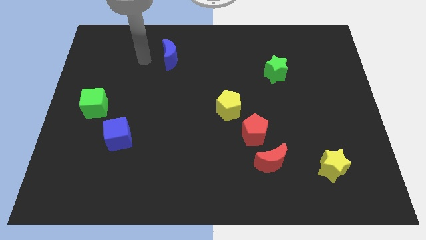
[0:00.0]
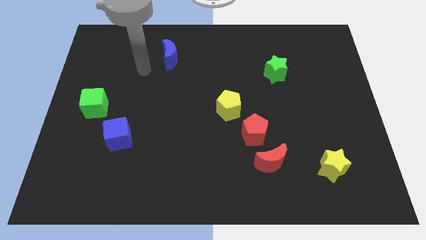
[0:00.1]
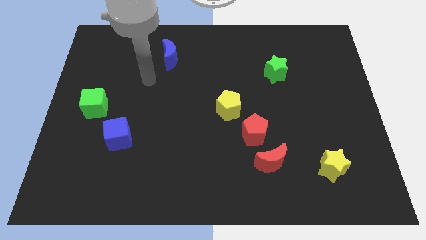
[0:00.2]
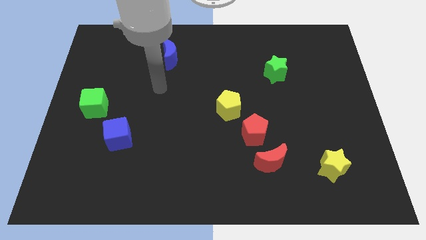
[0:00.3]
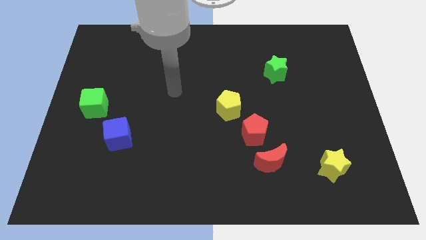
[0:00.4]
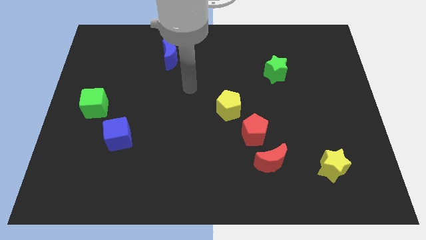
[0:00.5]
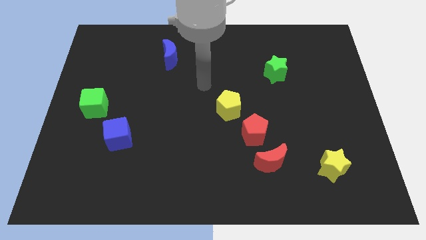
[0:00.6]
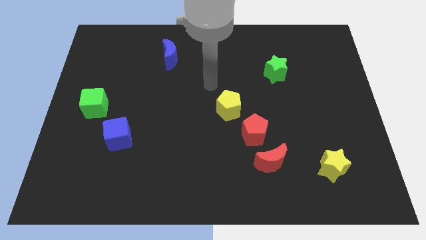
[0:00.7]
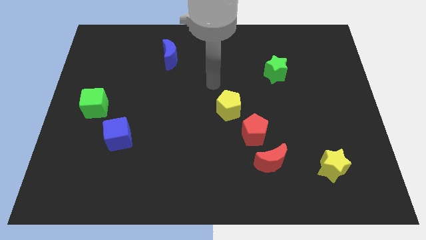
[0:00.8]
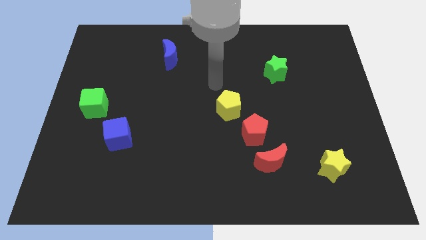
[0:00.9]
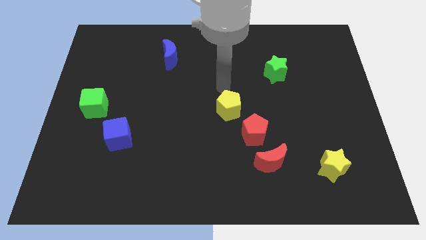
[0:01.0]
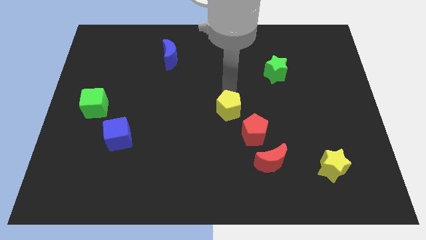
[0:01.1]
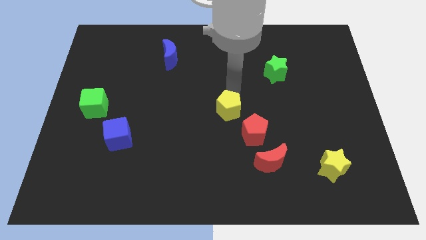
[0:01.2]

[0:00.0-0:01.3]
place your arm to the top of the yellow pentagon

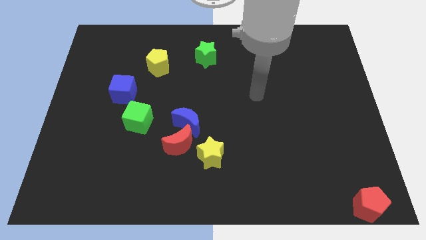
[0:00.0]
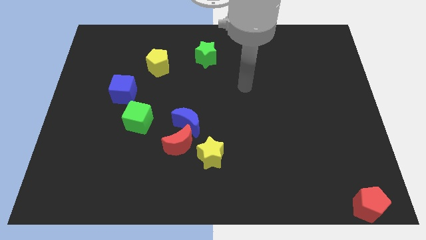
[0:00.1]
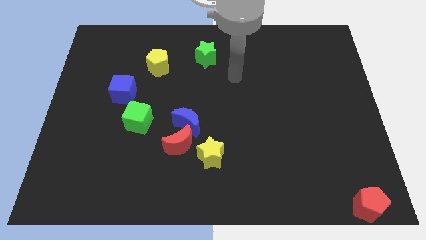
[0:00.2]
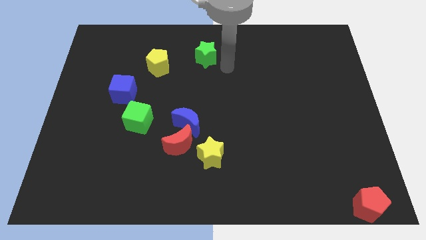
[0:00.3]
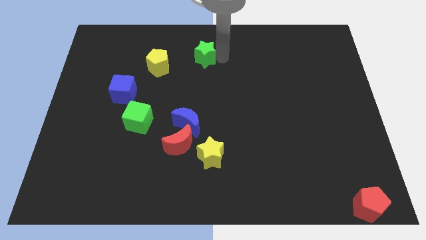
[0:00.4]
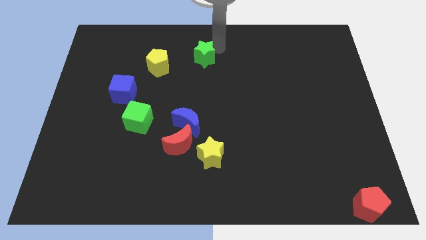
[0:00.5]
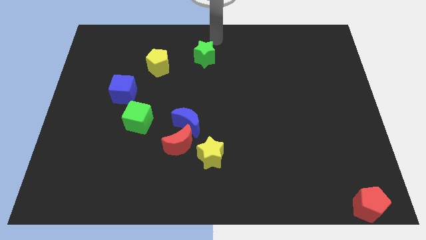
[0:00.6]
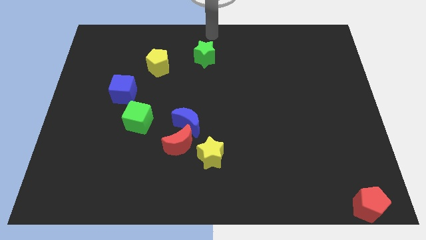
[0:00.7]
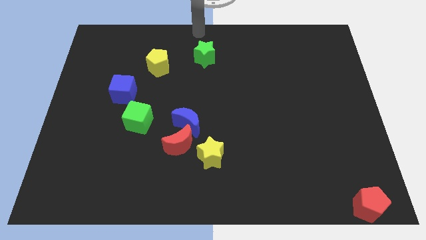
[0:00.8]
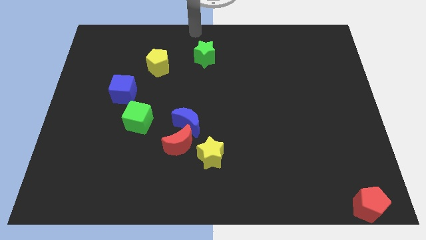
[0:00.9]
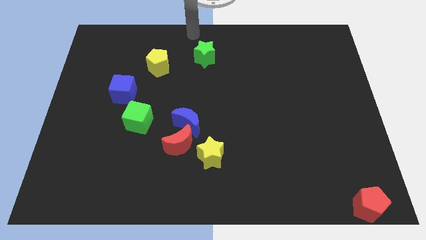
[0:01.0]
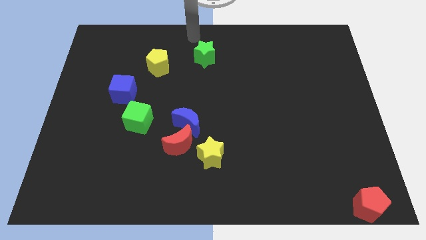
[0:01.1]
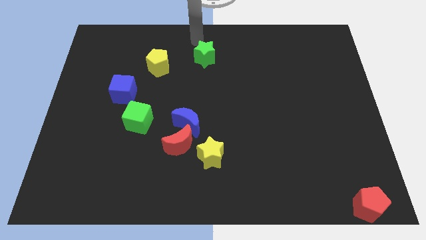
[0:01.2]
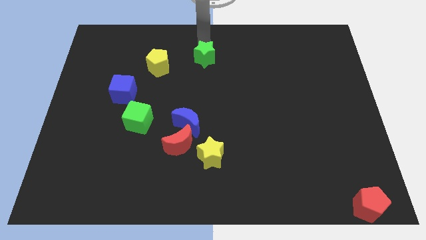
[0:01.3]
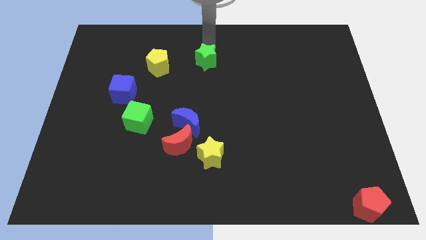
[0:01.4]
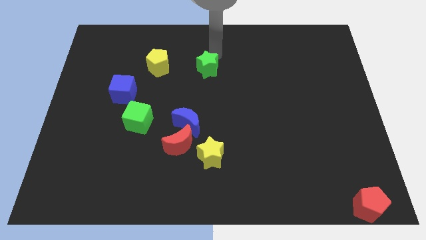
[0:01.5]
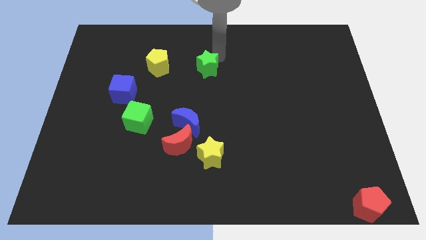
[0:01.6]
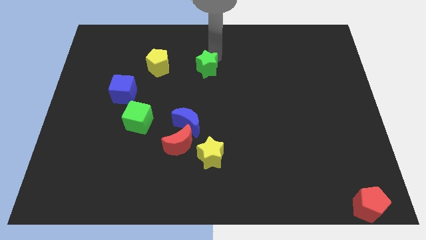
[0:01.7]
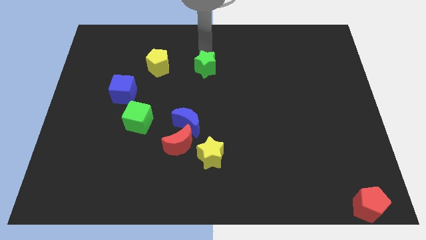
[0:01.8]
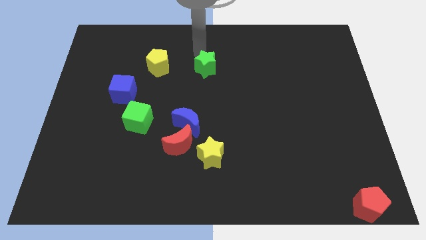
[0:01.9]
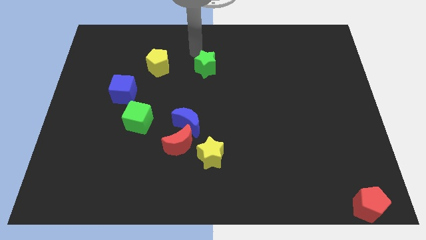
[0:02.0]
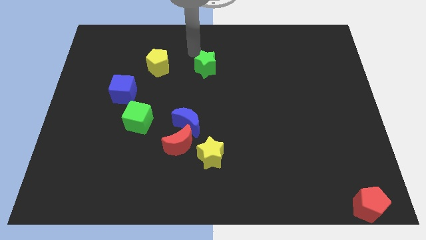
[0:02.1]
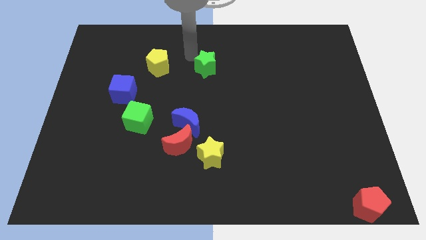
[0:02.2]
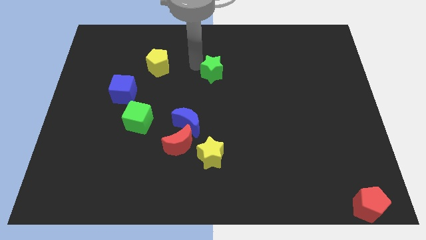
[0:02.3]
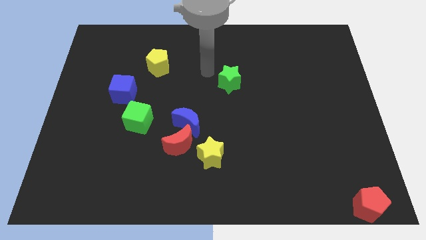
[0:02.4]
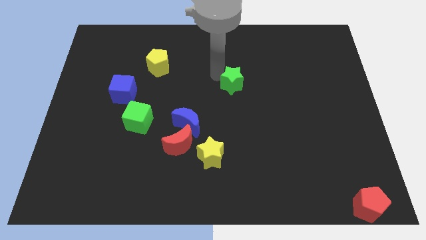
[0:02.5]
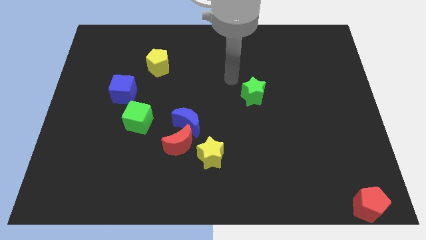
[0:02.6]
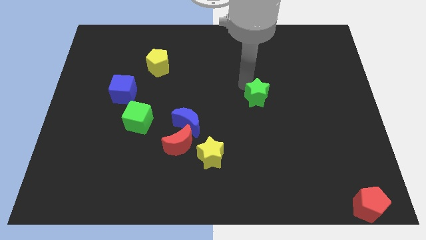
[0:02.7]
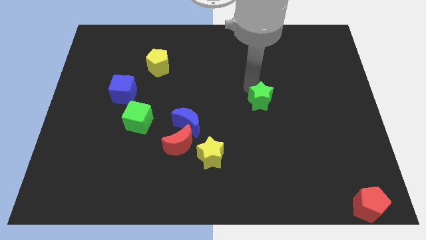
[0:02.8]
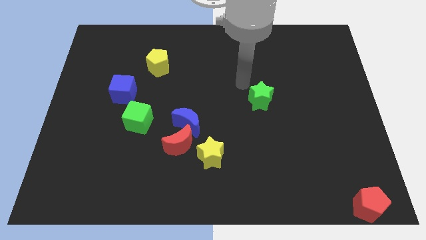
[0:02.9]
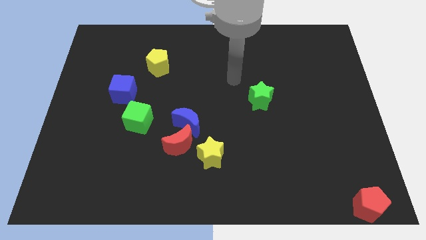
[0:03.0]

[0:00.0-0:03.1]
move green star to the top right of blue moon

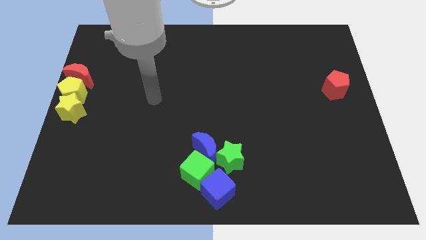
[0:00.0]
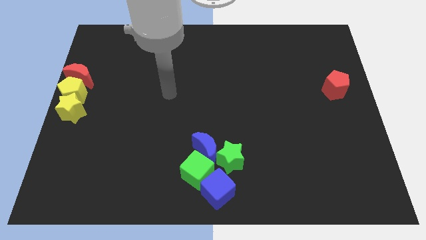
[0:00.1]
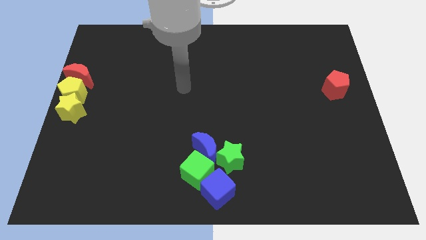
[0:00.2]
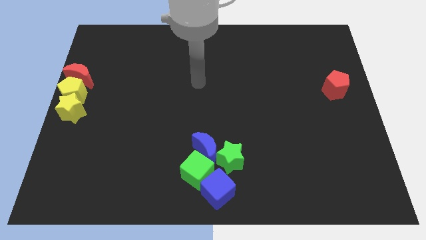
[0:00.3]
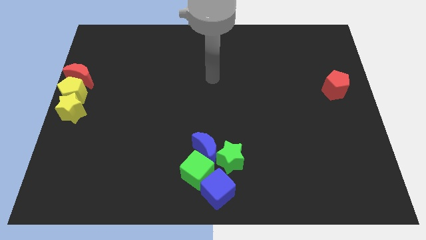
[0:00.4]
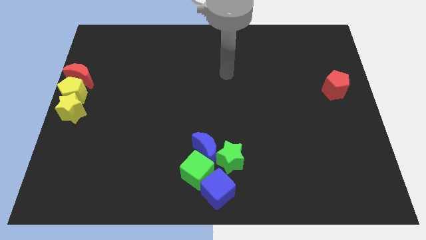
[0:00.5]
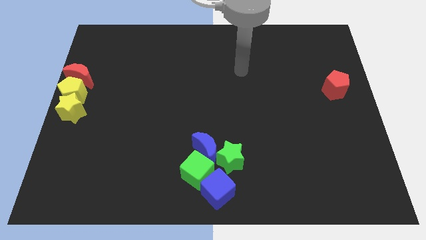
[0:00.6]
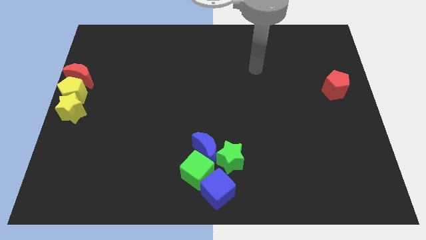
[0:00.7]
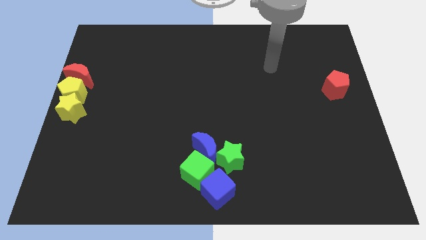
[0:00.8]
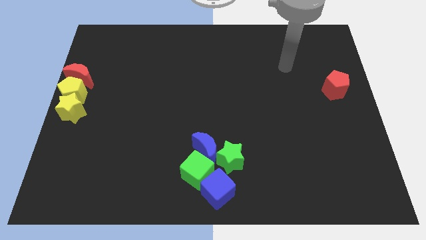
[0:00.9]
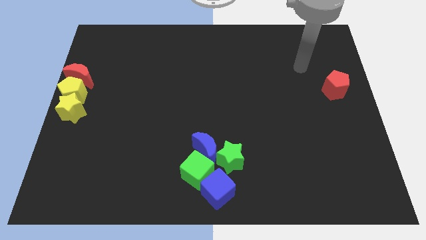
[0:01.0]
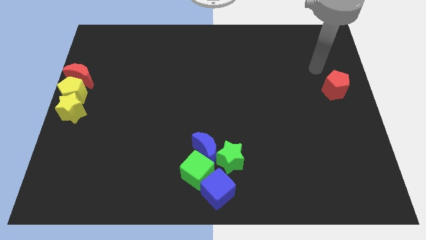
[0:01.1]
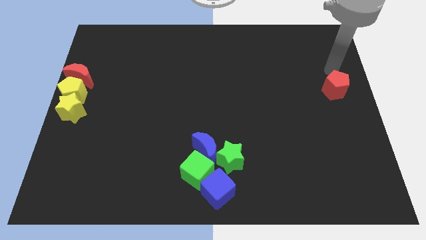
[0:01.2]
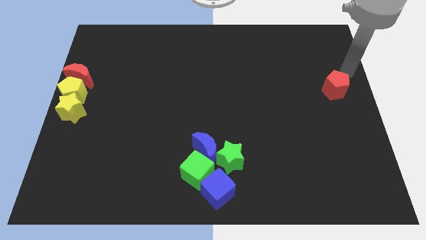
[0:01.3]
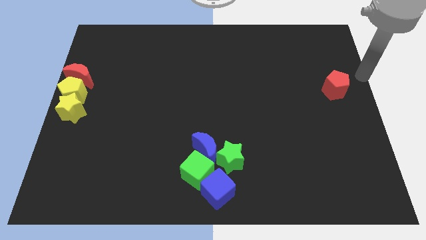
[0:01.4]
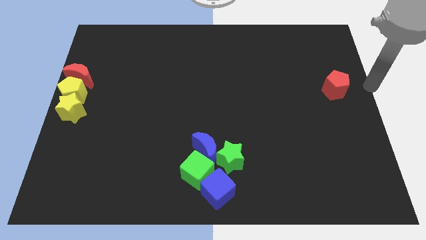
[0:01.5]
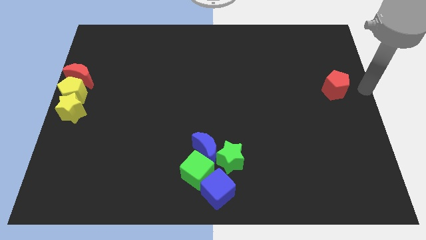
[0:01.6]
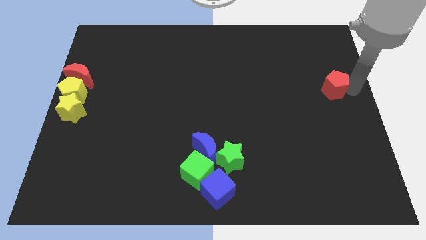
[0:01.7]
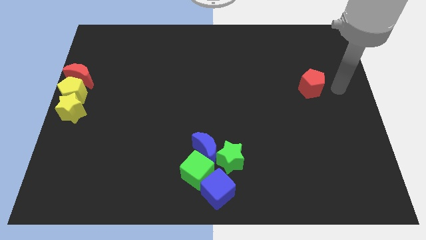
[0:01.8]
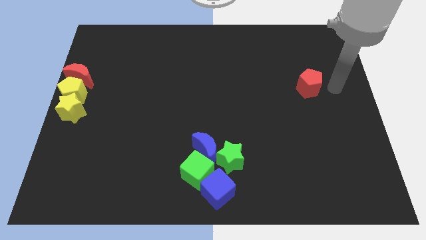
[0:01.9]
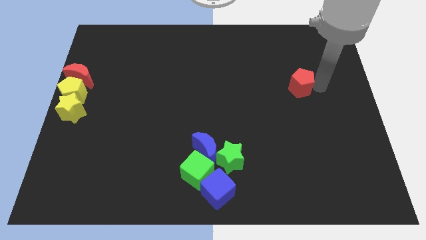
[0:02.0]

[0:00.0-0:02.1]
move the red pentagon slightly towards the left

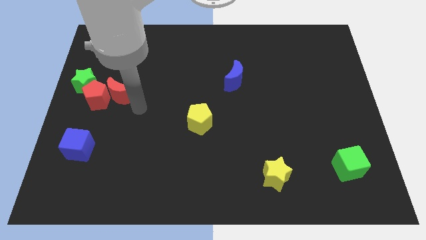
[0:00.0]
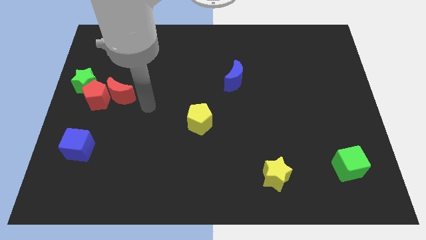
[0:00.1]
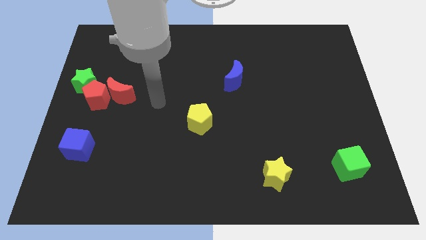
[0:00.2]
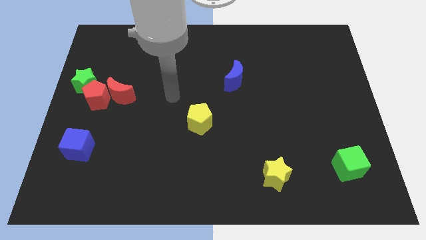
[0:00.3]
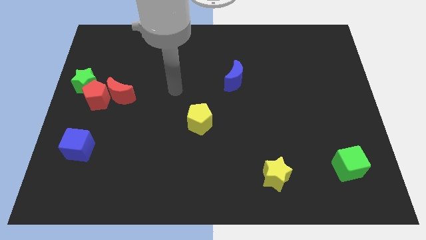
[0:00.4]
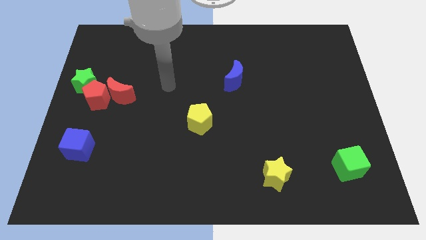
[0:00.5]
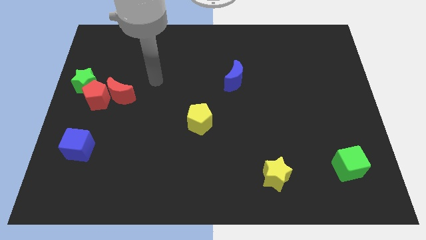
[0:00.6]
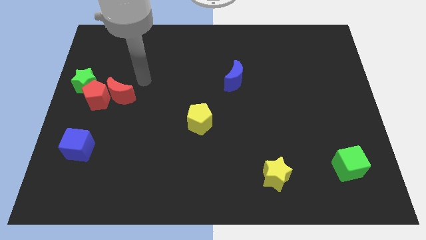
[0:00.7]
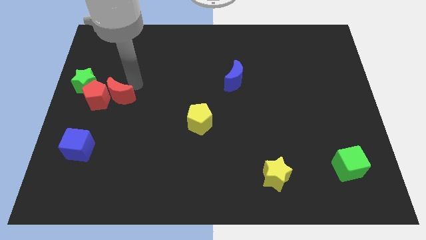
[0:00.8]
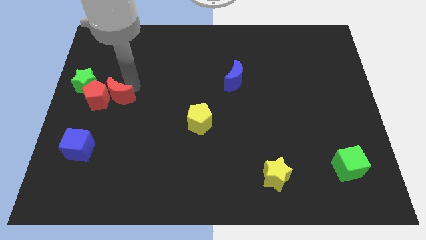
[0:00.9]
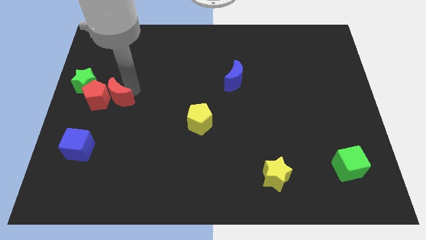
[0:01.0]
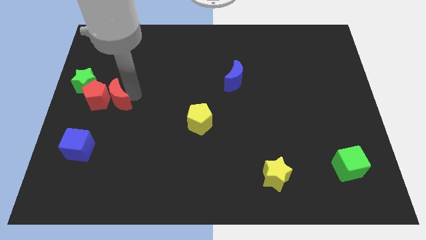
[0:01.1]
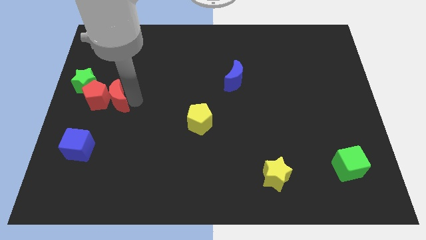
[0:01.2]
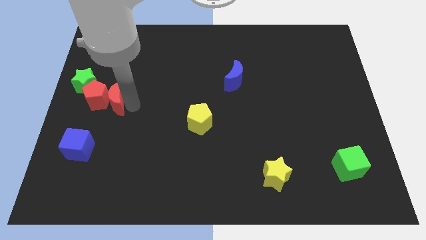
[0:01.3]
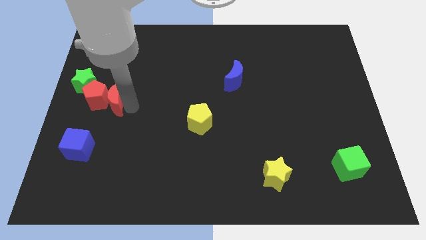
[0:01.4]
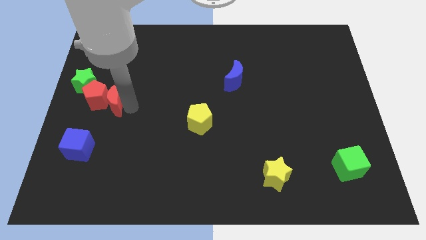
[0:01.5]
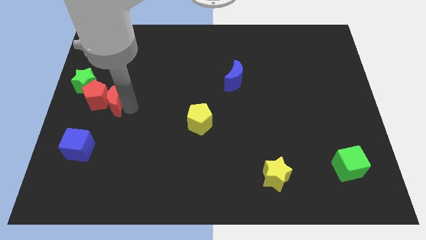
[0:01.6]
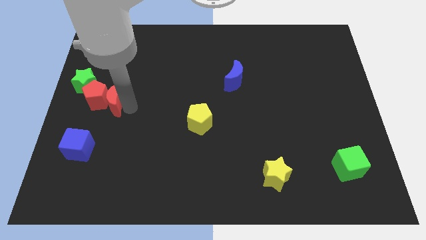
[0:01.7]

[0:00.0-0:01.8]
slightly turn the red moon to the right of the red pentagon

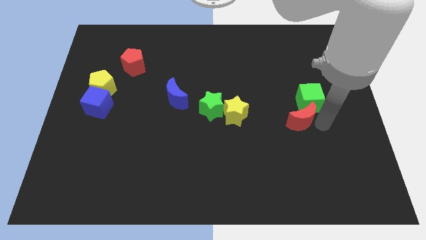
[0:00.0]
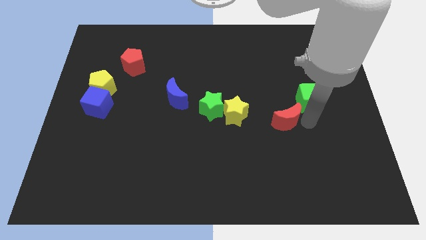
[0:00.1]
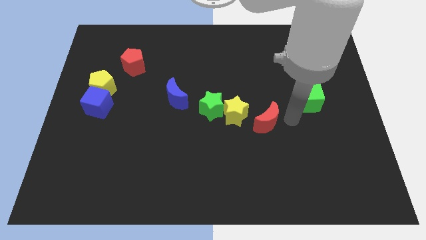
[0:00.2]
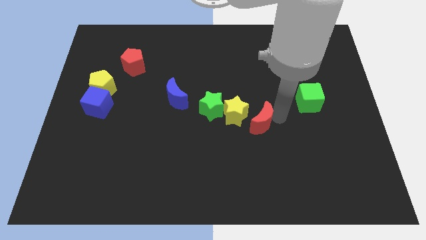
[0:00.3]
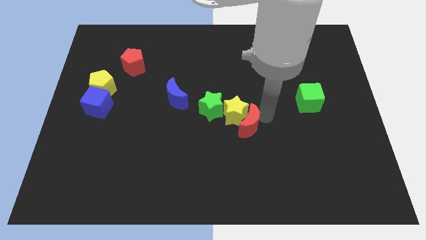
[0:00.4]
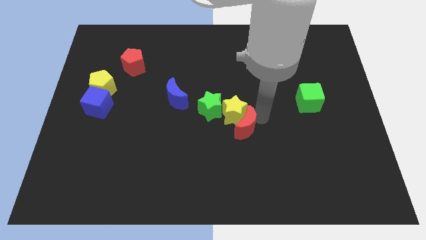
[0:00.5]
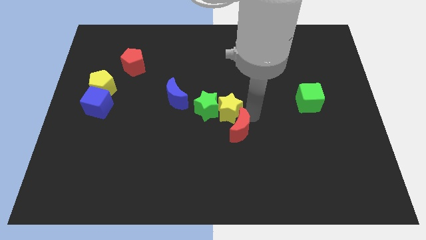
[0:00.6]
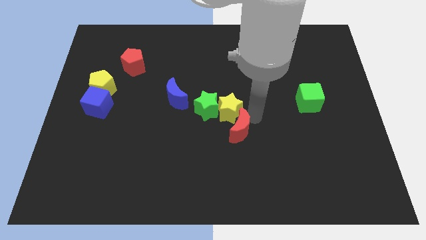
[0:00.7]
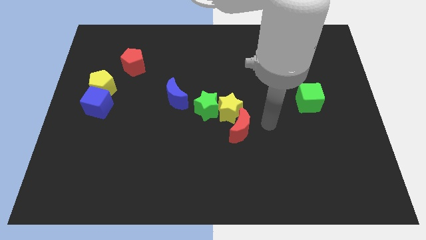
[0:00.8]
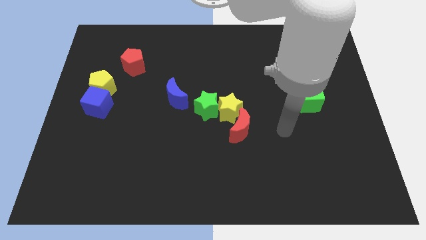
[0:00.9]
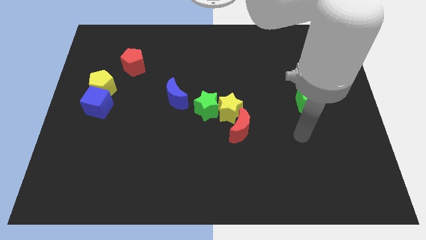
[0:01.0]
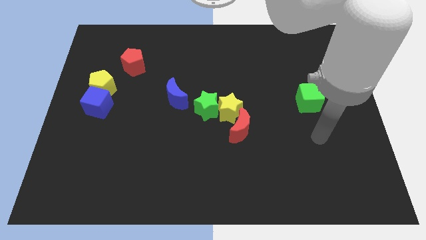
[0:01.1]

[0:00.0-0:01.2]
push the red crescent into the yellow star
